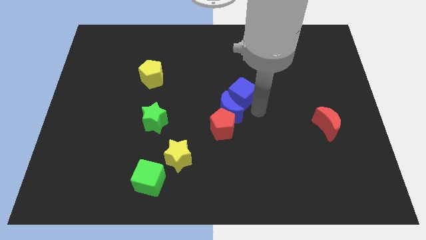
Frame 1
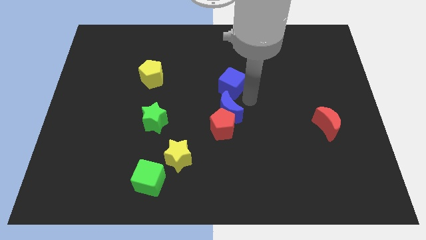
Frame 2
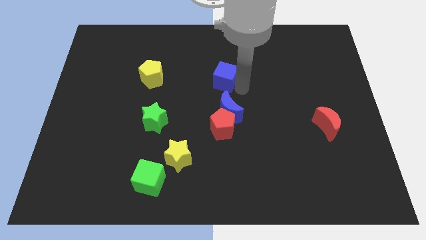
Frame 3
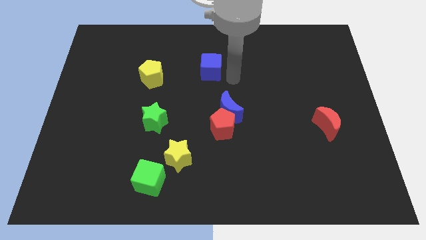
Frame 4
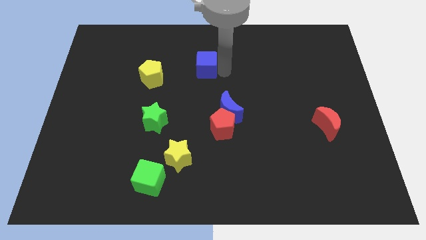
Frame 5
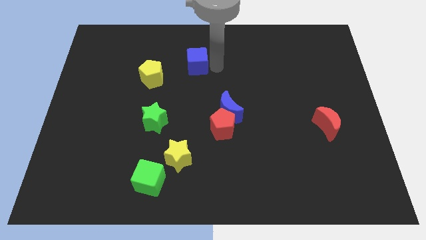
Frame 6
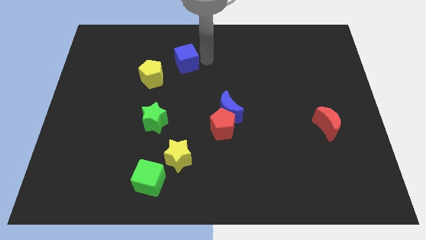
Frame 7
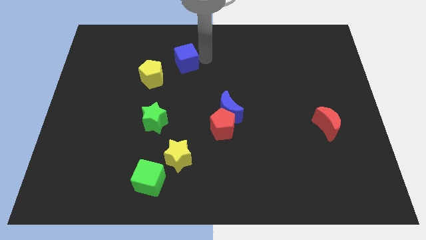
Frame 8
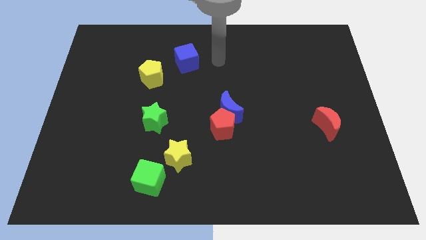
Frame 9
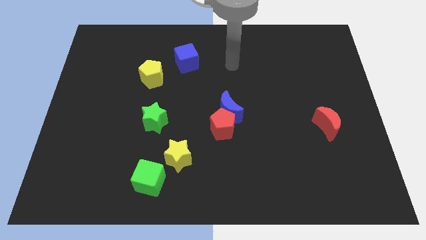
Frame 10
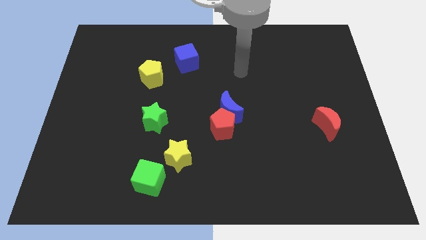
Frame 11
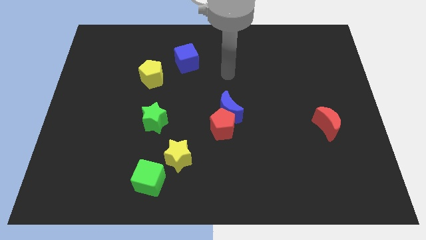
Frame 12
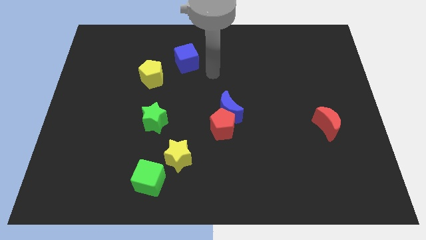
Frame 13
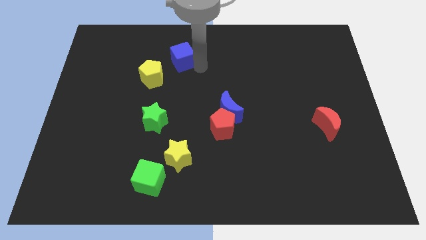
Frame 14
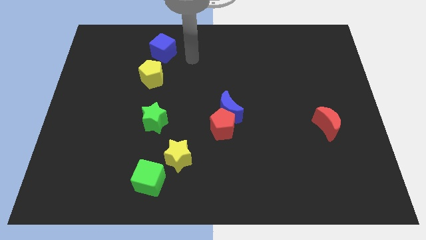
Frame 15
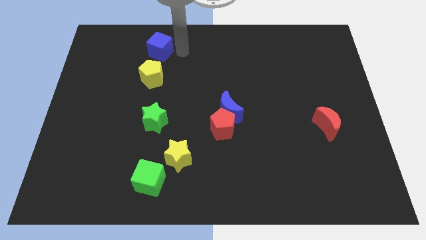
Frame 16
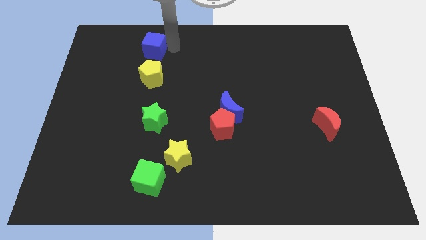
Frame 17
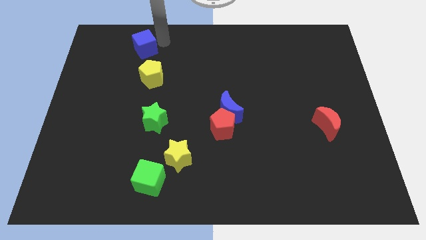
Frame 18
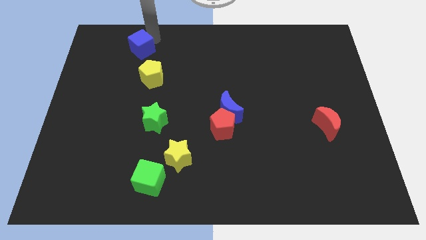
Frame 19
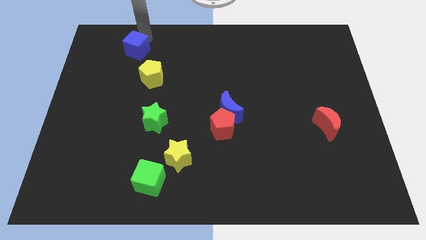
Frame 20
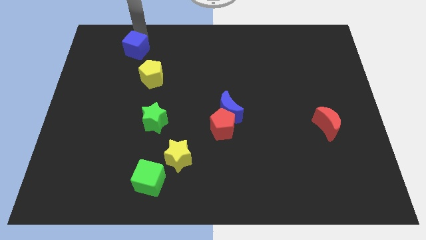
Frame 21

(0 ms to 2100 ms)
place blue cube to the top left of yellow pentagon

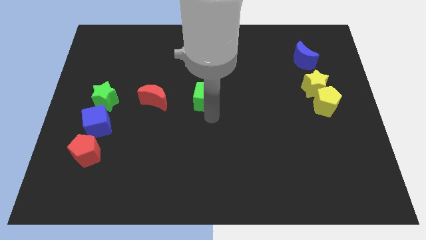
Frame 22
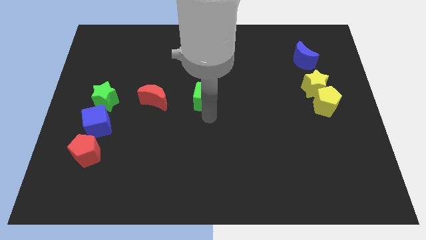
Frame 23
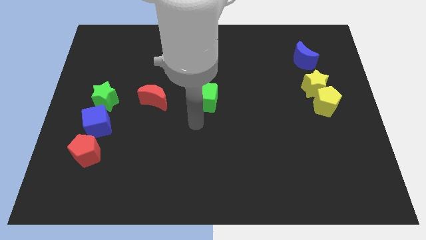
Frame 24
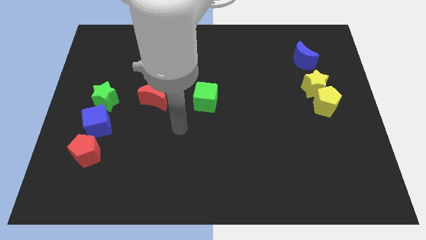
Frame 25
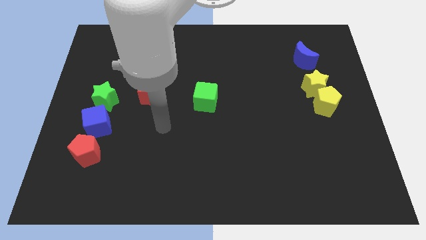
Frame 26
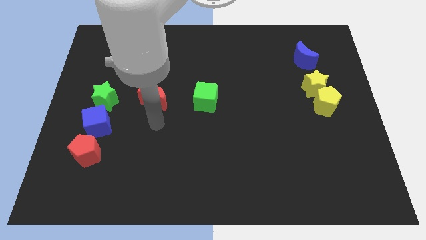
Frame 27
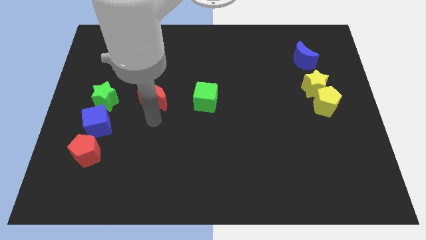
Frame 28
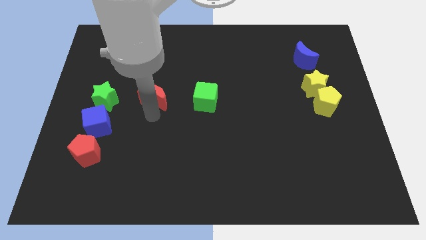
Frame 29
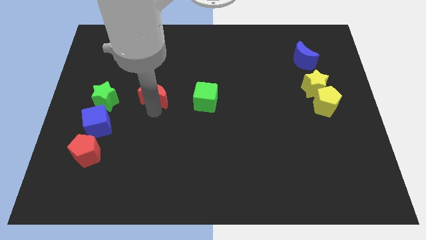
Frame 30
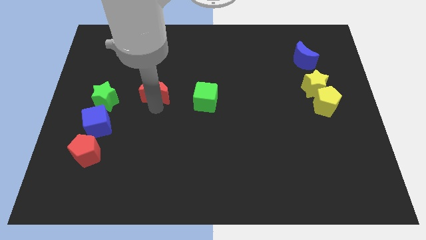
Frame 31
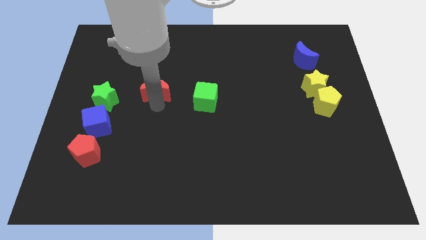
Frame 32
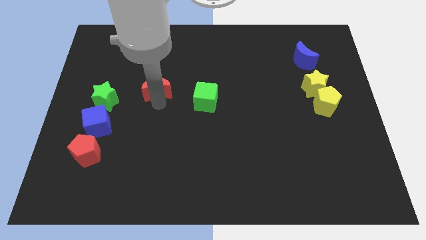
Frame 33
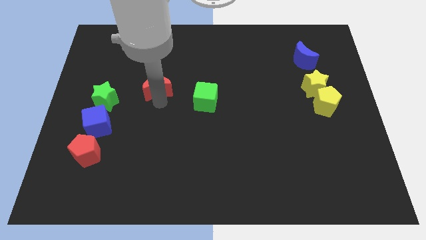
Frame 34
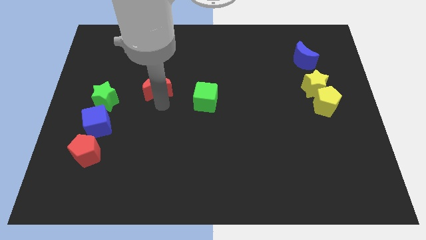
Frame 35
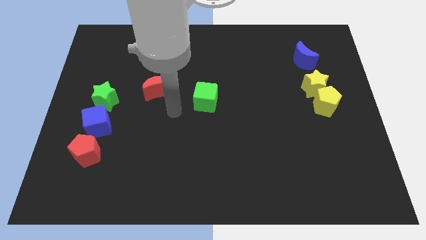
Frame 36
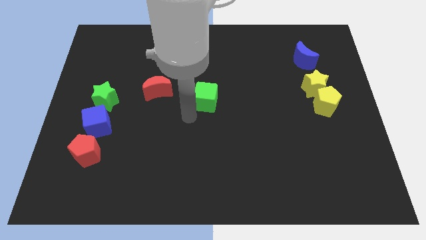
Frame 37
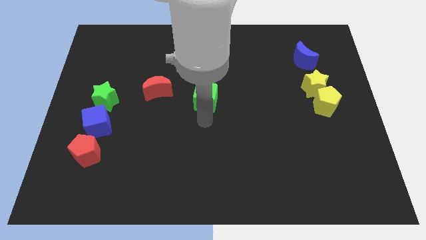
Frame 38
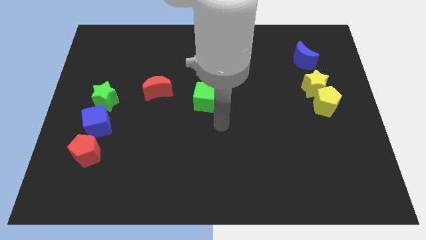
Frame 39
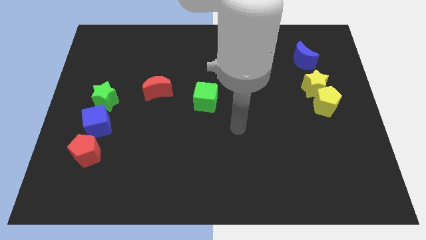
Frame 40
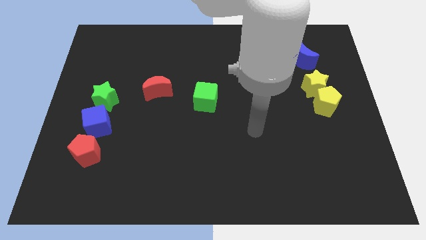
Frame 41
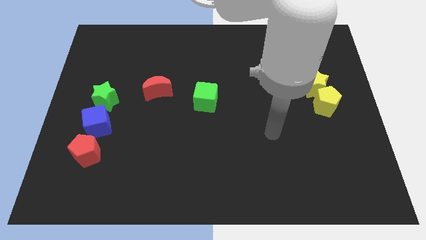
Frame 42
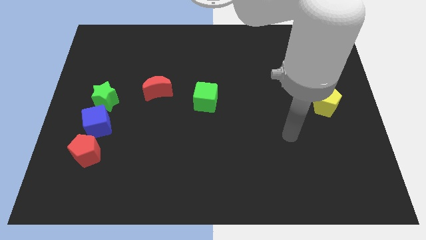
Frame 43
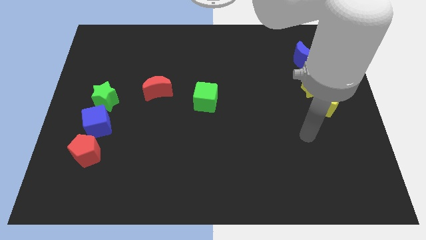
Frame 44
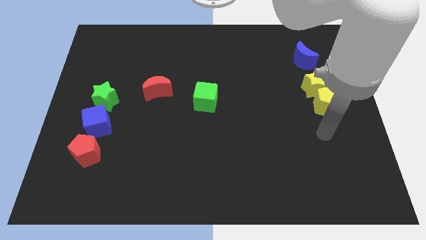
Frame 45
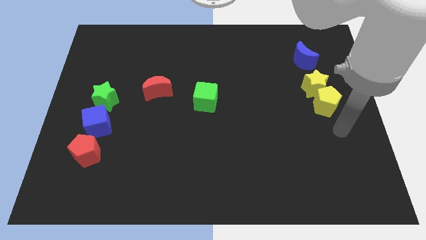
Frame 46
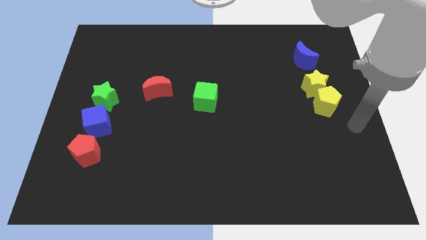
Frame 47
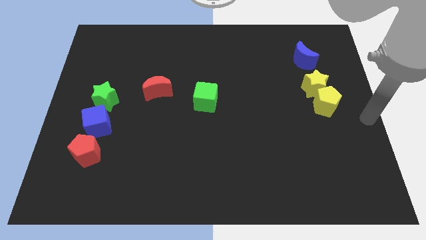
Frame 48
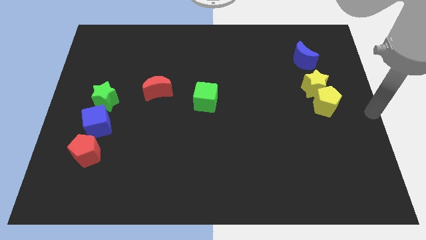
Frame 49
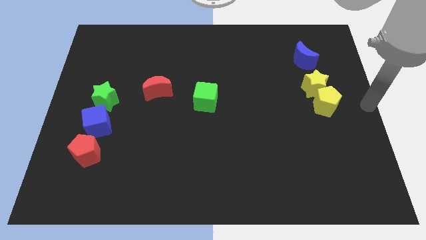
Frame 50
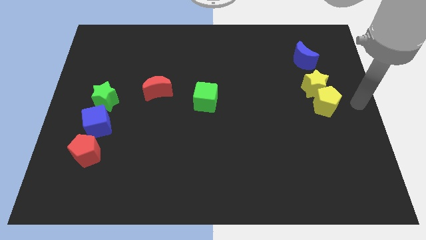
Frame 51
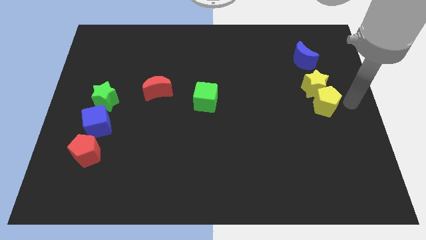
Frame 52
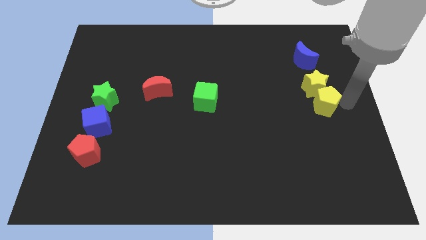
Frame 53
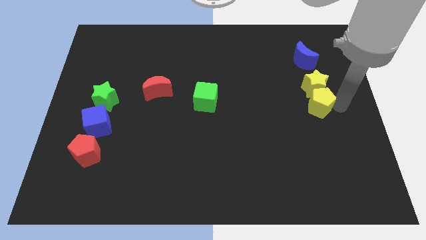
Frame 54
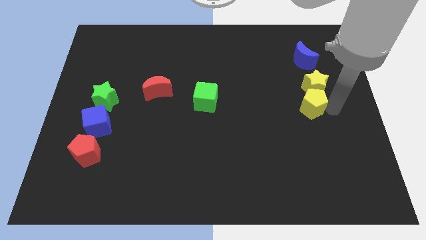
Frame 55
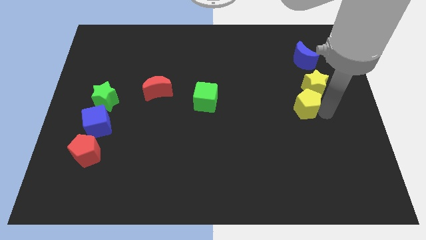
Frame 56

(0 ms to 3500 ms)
slightly push the yellow pentagon towards left

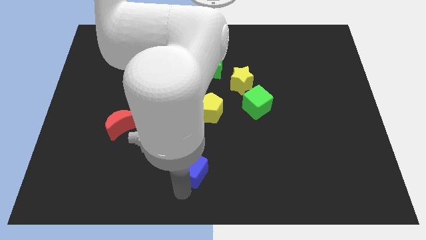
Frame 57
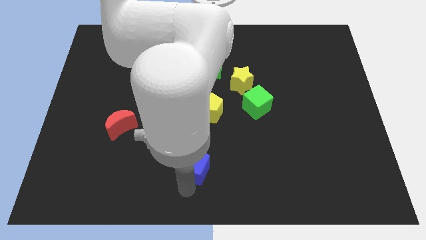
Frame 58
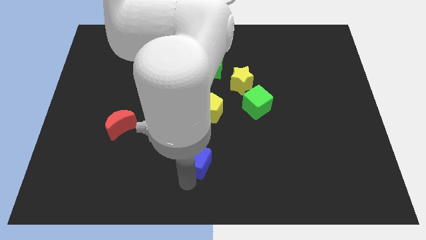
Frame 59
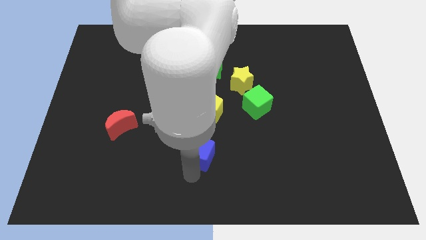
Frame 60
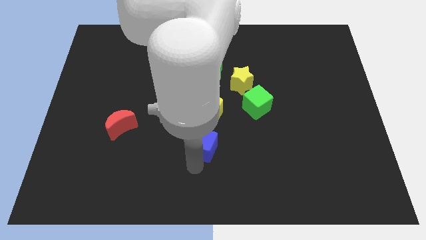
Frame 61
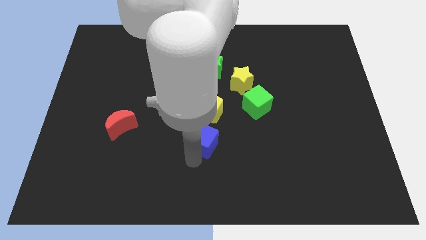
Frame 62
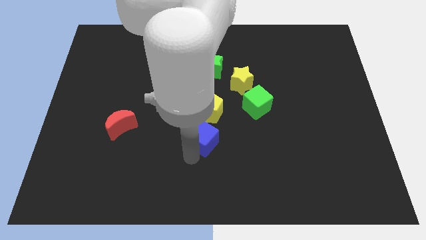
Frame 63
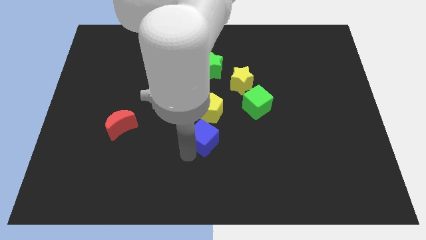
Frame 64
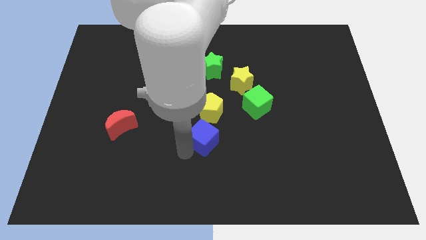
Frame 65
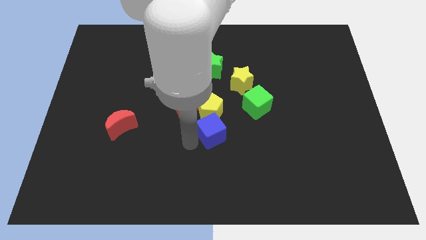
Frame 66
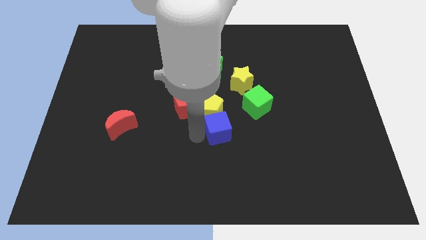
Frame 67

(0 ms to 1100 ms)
push blue cube into yellow pentagon

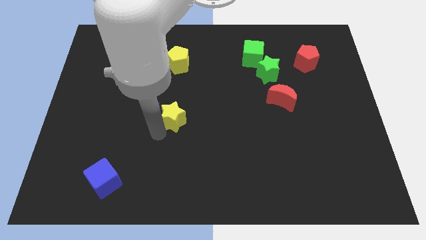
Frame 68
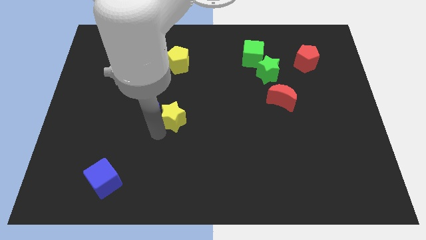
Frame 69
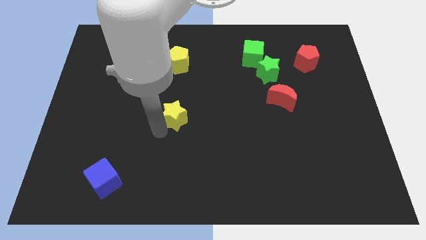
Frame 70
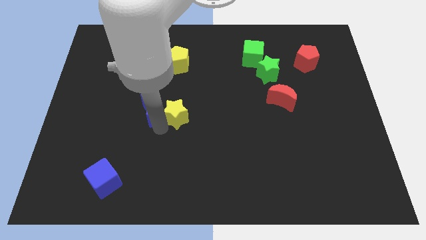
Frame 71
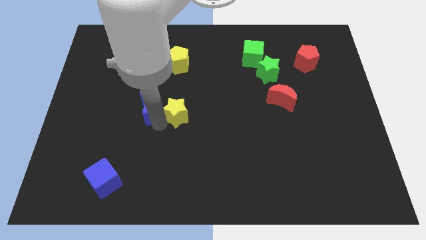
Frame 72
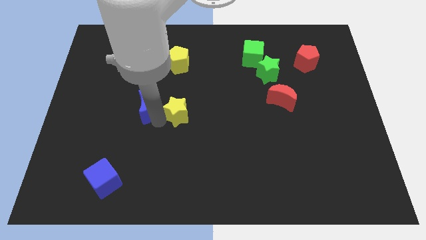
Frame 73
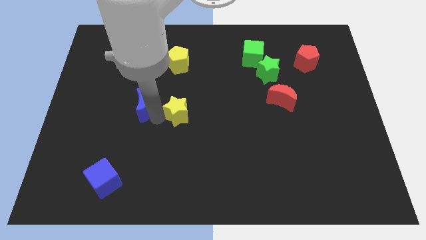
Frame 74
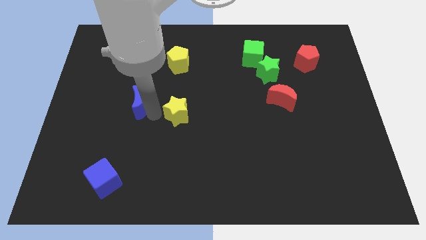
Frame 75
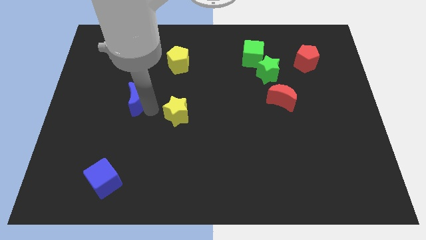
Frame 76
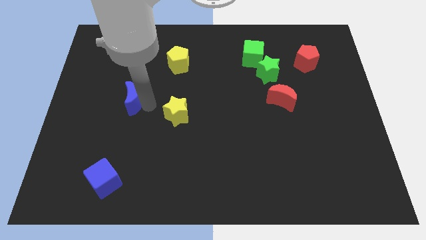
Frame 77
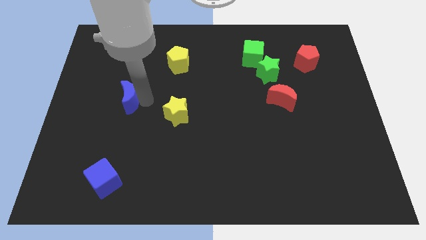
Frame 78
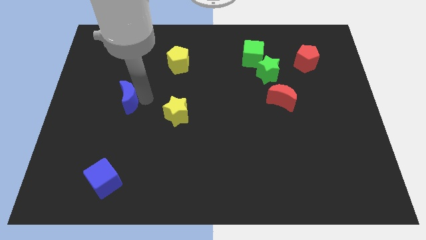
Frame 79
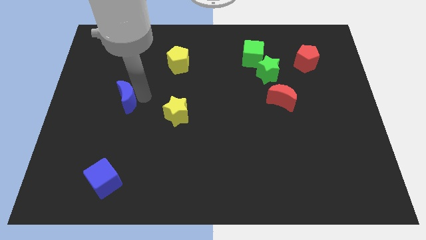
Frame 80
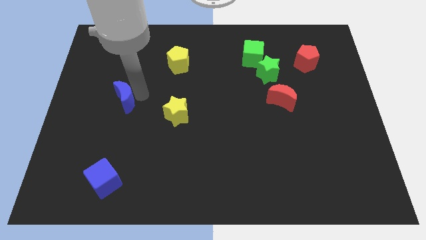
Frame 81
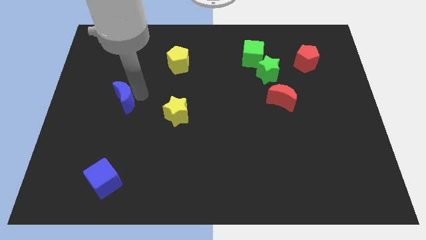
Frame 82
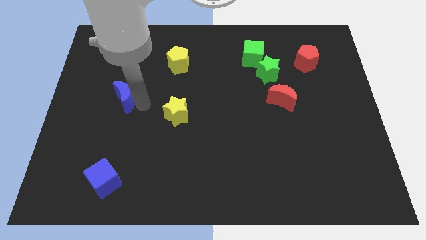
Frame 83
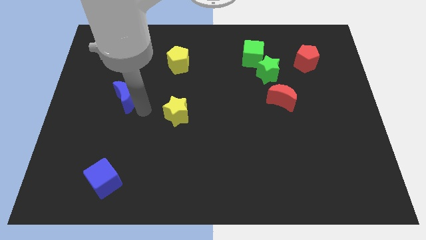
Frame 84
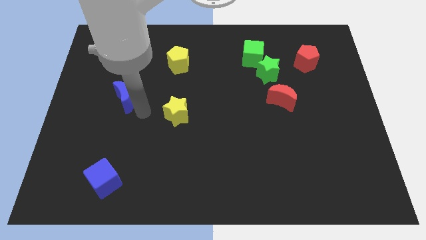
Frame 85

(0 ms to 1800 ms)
separate the blue crescent from the yellow star

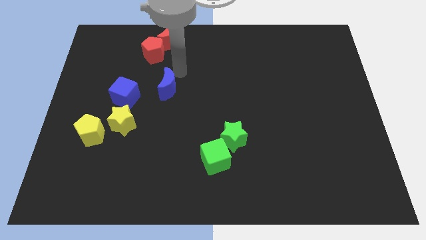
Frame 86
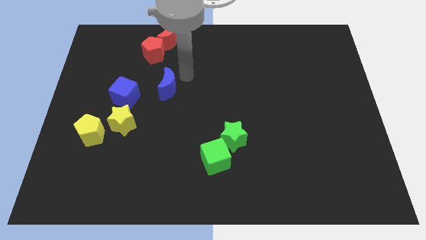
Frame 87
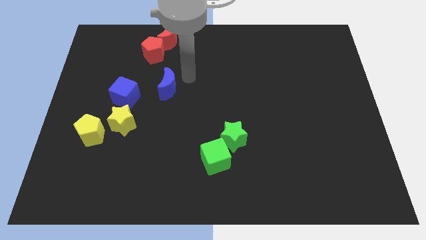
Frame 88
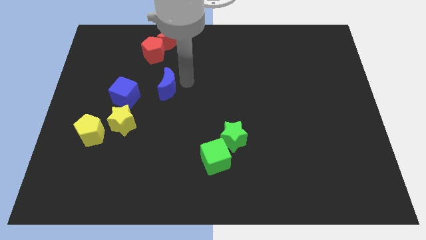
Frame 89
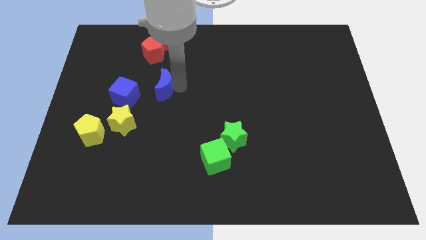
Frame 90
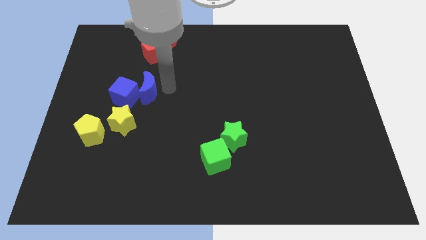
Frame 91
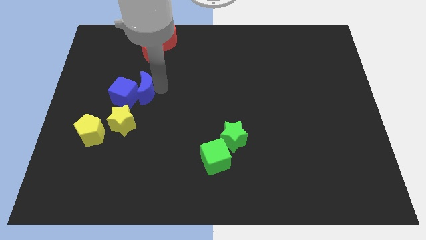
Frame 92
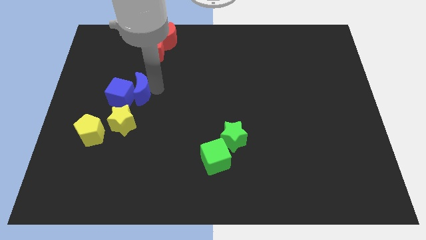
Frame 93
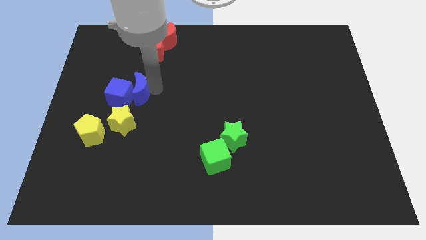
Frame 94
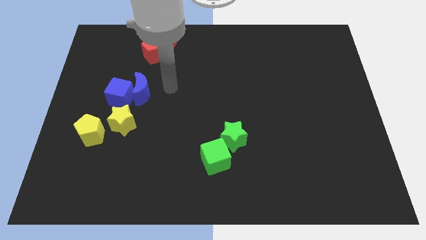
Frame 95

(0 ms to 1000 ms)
push the blue moon into the blue cube
